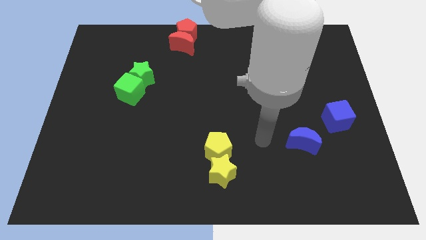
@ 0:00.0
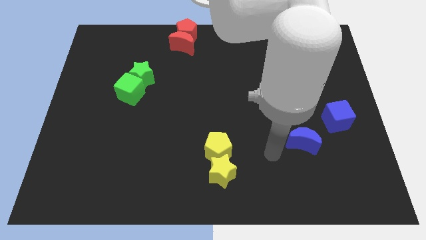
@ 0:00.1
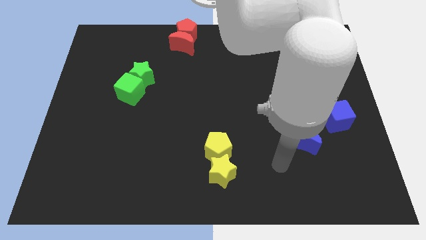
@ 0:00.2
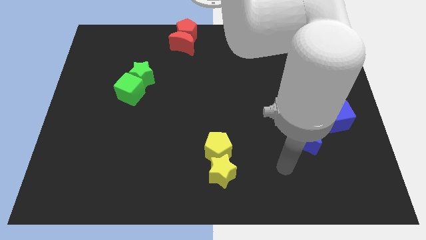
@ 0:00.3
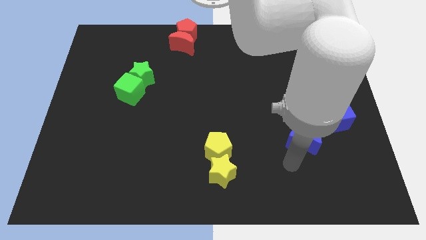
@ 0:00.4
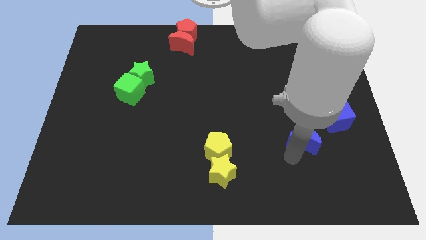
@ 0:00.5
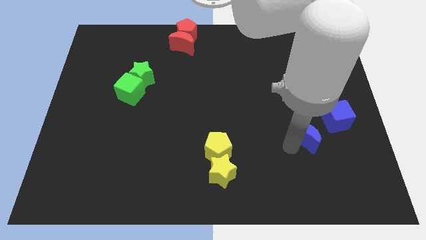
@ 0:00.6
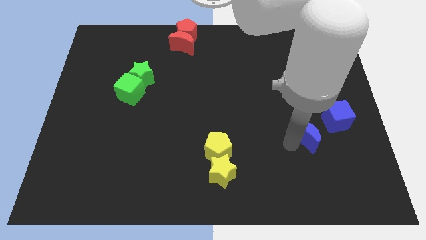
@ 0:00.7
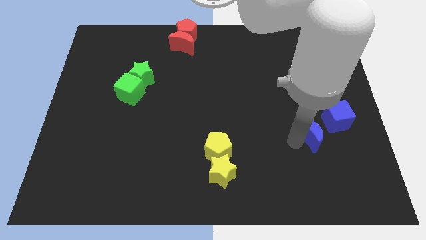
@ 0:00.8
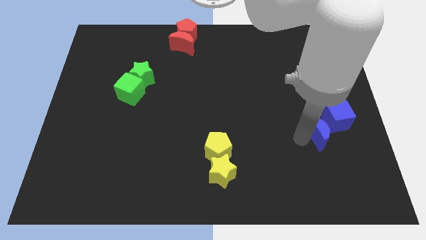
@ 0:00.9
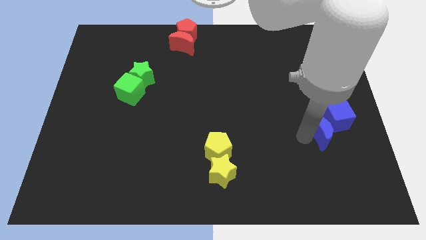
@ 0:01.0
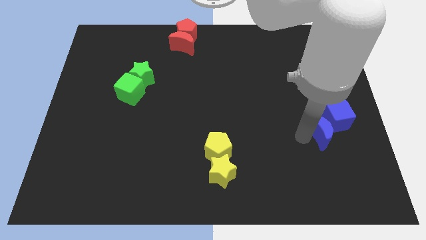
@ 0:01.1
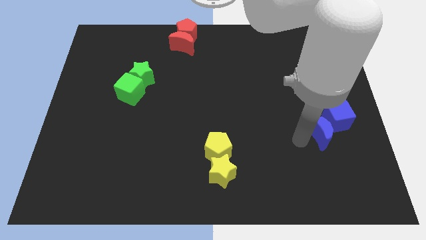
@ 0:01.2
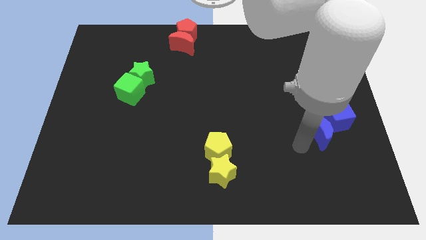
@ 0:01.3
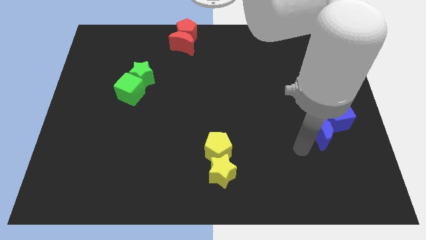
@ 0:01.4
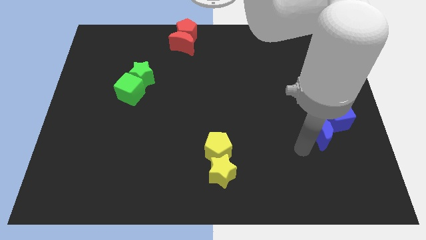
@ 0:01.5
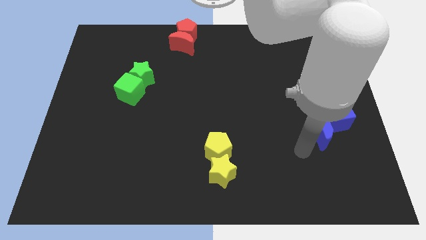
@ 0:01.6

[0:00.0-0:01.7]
push the blue crescent towards the blue cube

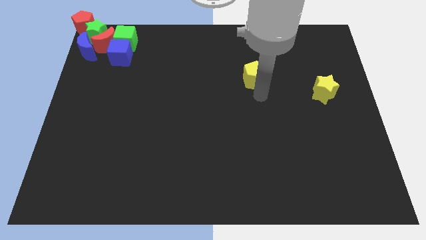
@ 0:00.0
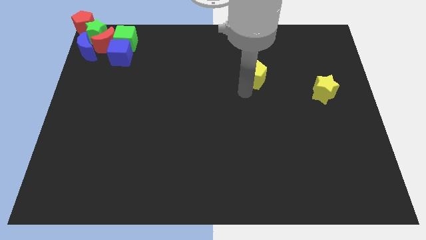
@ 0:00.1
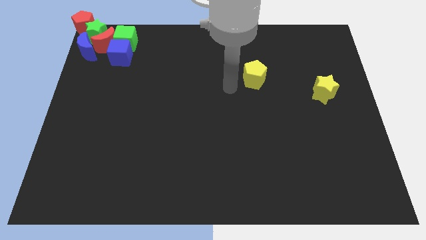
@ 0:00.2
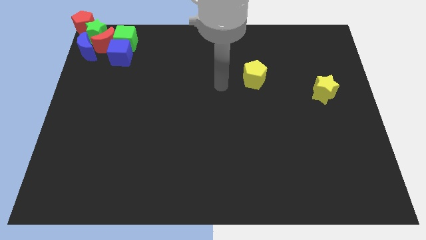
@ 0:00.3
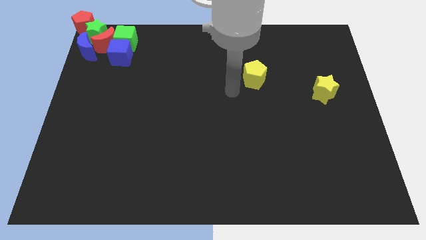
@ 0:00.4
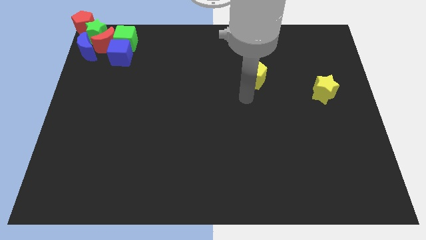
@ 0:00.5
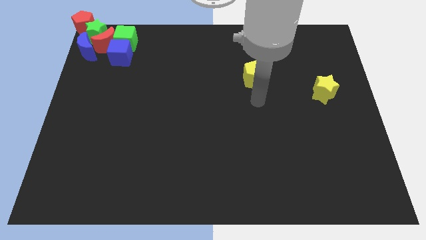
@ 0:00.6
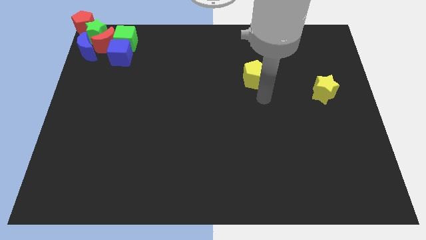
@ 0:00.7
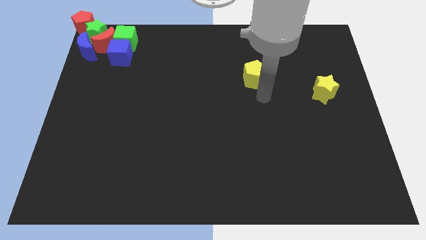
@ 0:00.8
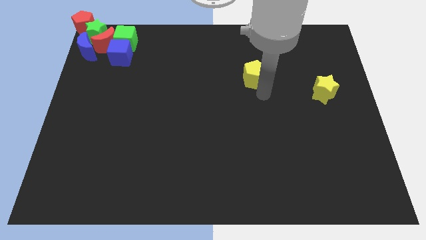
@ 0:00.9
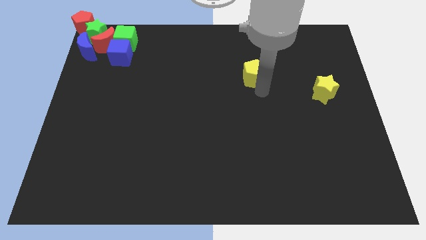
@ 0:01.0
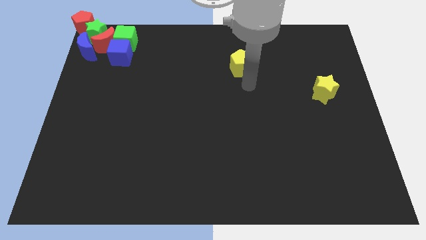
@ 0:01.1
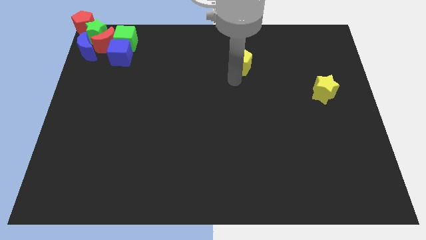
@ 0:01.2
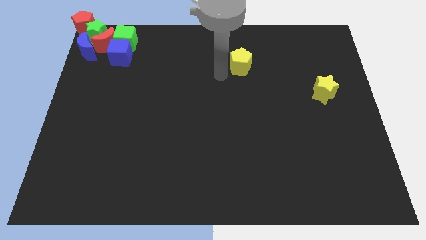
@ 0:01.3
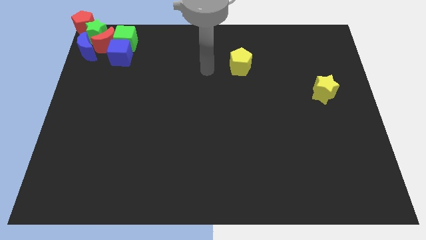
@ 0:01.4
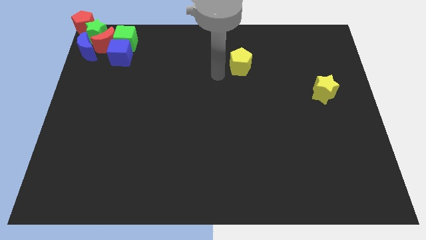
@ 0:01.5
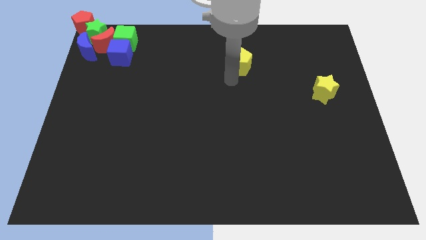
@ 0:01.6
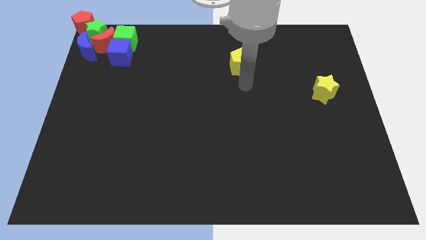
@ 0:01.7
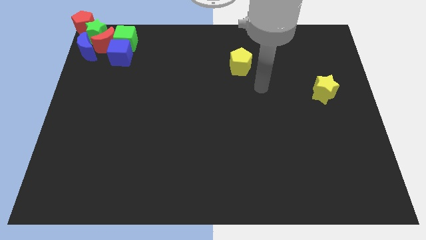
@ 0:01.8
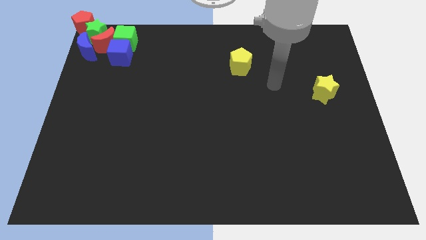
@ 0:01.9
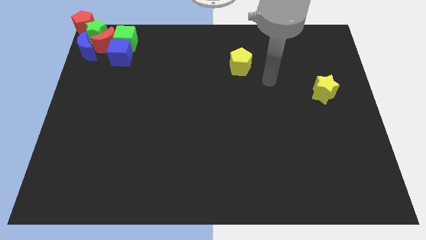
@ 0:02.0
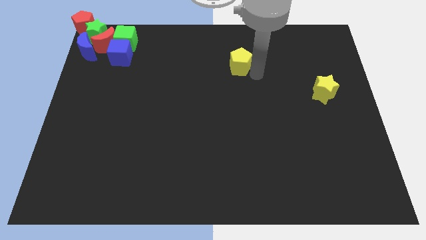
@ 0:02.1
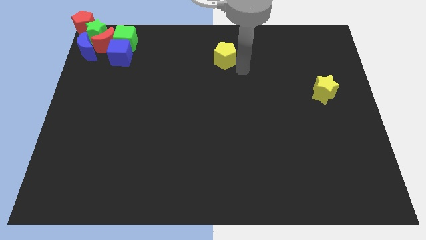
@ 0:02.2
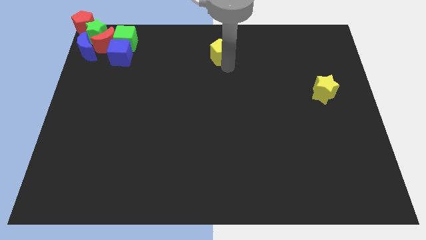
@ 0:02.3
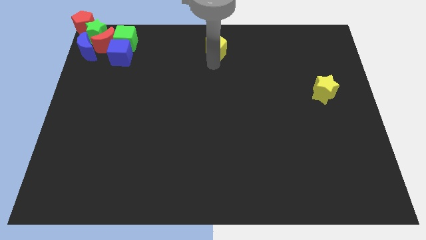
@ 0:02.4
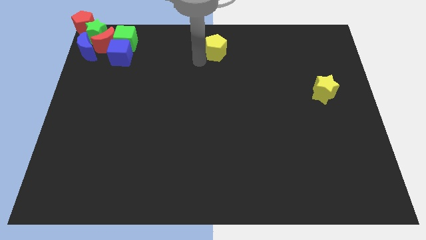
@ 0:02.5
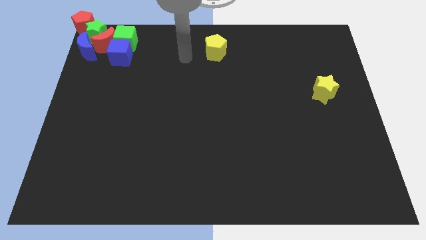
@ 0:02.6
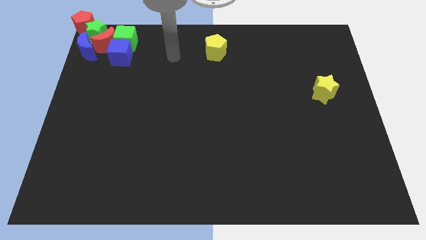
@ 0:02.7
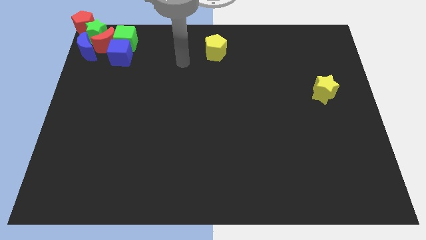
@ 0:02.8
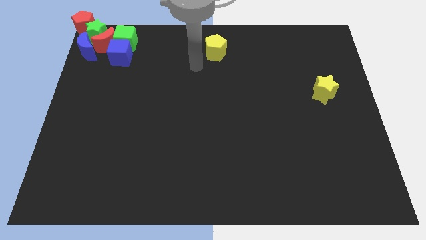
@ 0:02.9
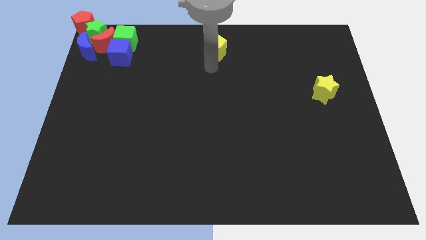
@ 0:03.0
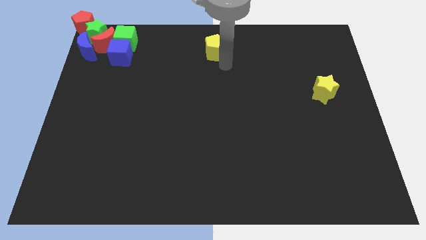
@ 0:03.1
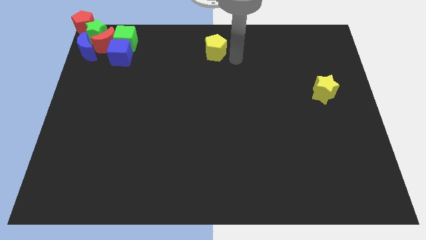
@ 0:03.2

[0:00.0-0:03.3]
move yellow pentagon to center top

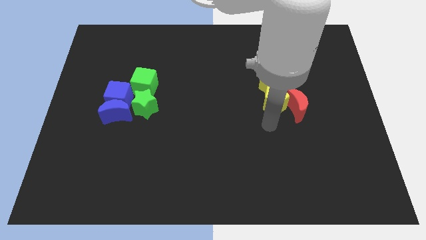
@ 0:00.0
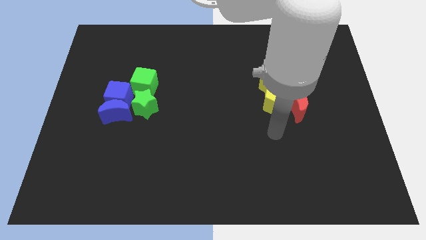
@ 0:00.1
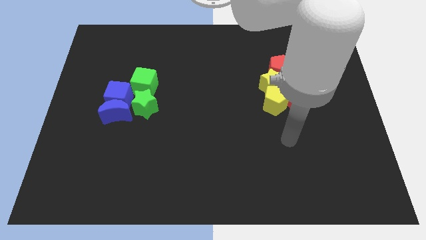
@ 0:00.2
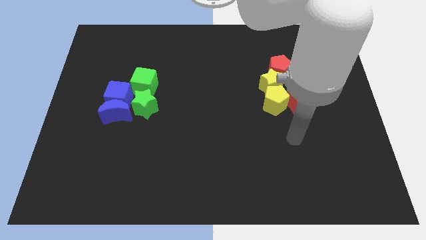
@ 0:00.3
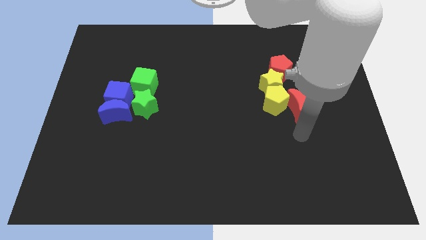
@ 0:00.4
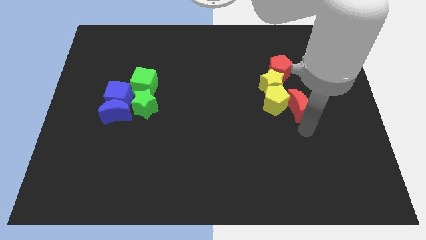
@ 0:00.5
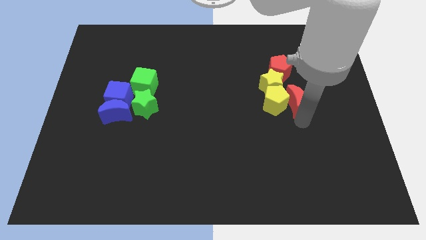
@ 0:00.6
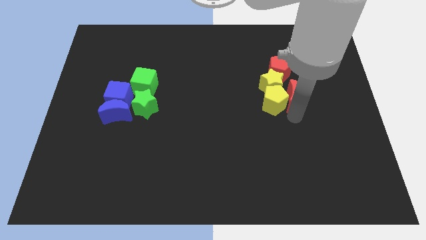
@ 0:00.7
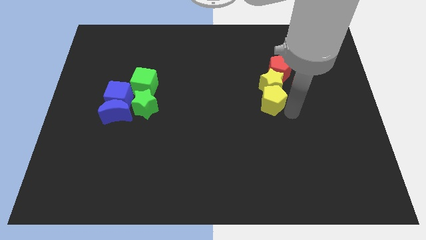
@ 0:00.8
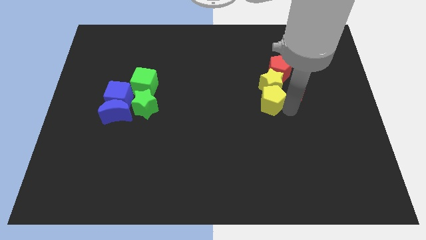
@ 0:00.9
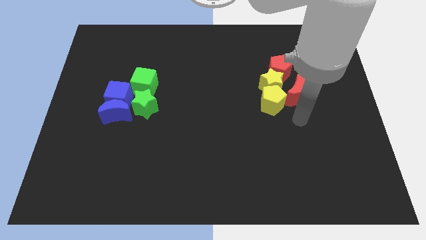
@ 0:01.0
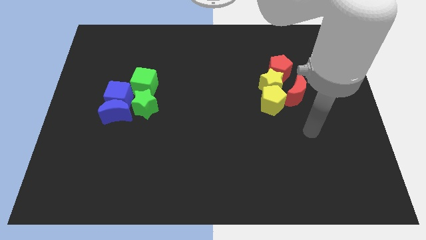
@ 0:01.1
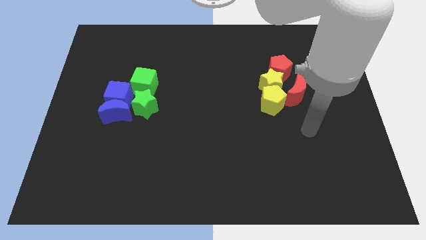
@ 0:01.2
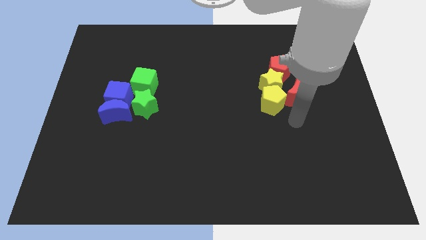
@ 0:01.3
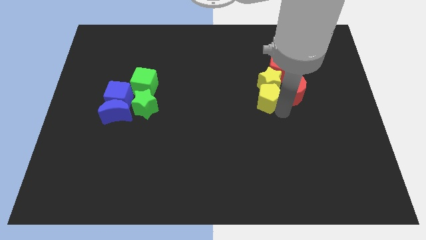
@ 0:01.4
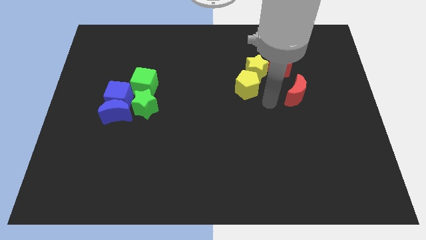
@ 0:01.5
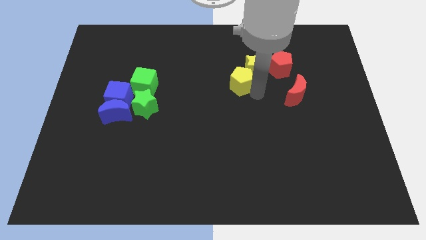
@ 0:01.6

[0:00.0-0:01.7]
move the yellow blocks away from the red blocks

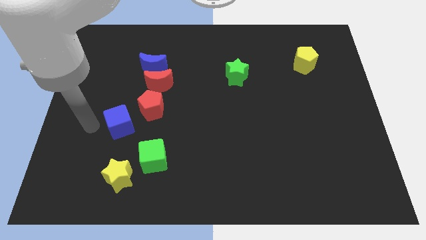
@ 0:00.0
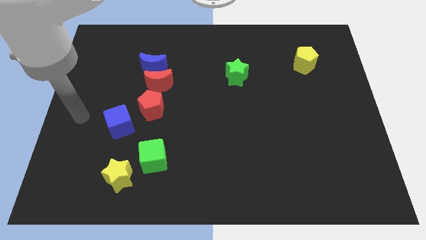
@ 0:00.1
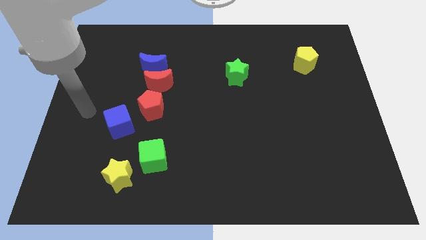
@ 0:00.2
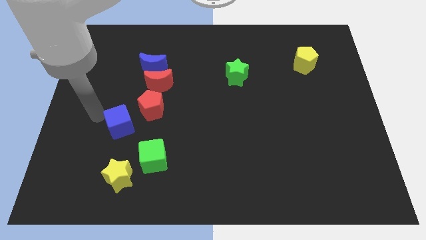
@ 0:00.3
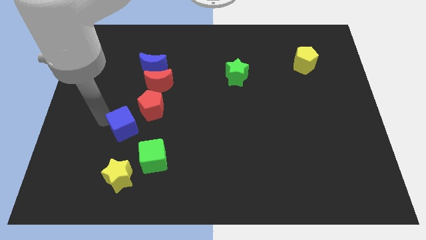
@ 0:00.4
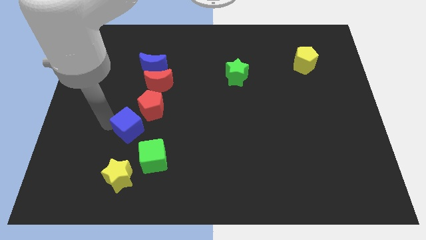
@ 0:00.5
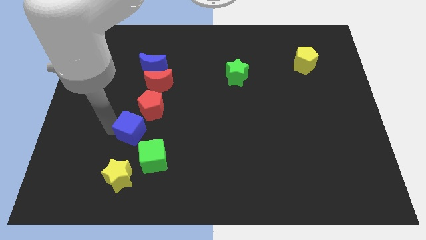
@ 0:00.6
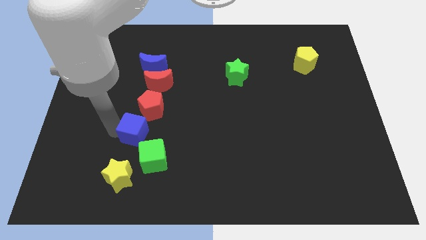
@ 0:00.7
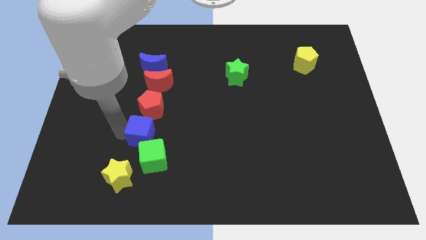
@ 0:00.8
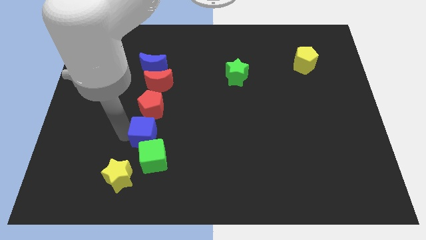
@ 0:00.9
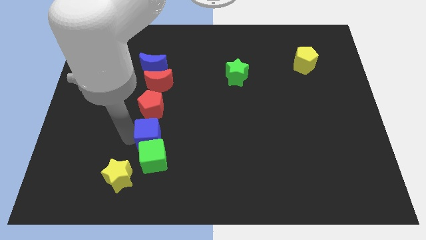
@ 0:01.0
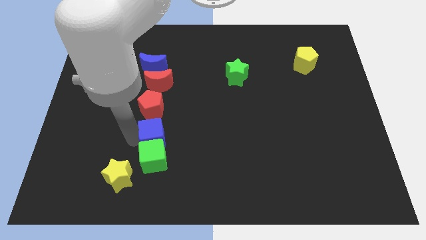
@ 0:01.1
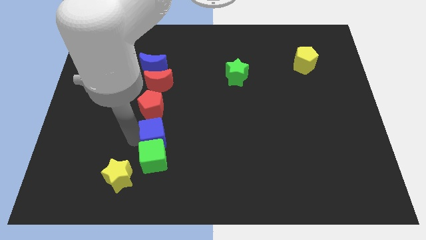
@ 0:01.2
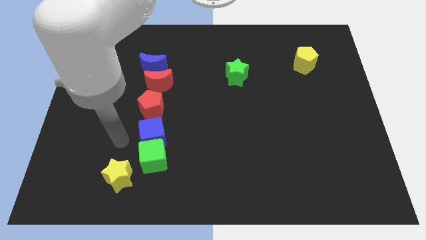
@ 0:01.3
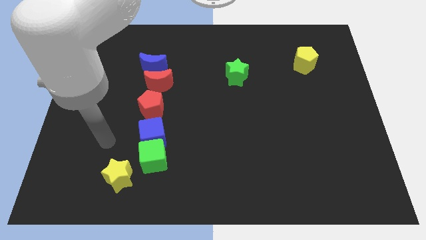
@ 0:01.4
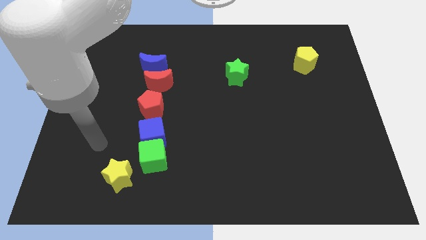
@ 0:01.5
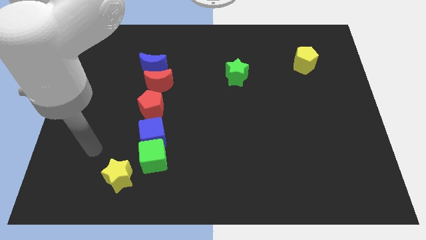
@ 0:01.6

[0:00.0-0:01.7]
push the blue cube to the top of the green cube

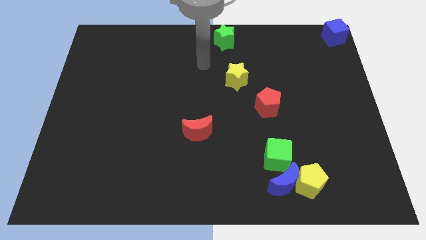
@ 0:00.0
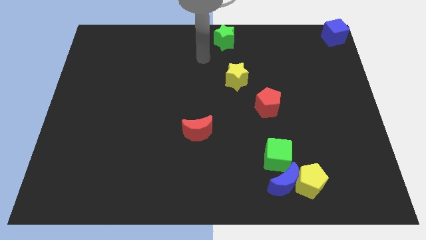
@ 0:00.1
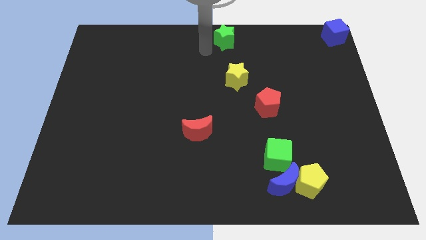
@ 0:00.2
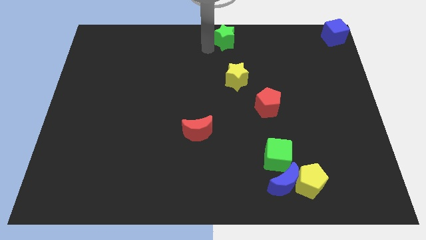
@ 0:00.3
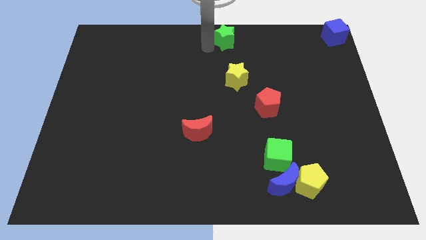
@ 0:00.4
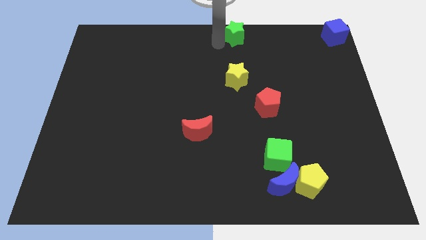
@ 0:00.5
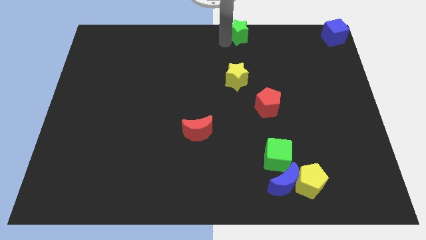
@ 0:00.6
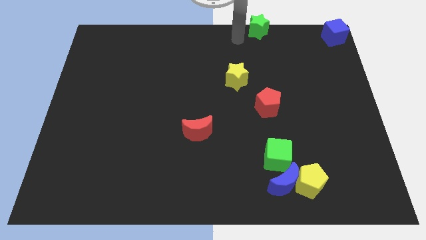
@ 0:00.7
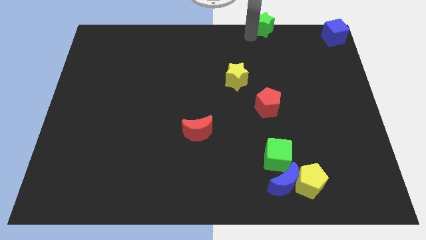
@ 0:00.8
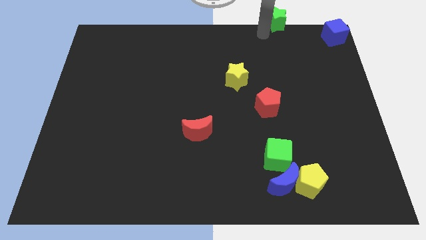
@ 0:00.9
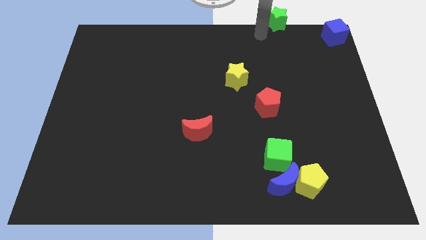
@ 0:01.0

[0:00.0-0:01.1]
move the green star to the top right of board
